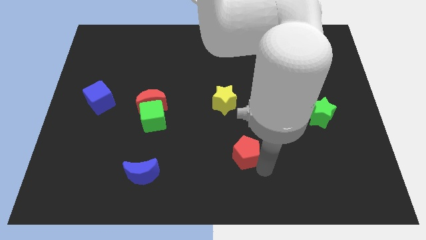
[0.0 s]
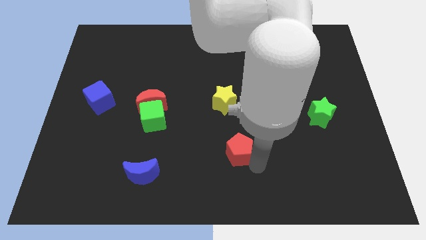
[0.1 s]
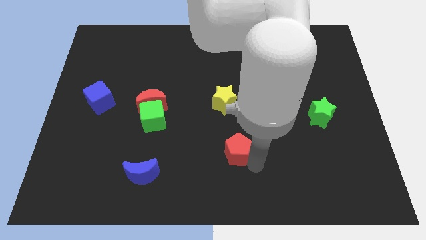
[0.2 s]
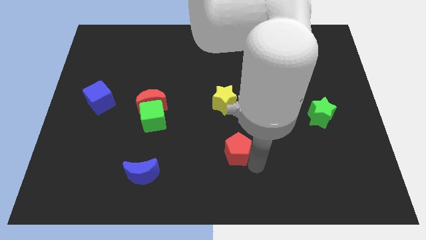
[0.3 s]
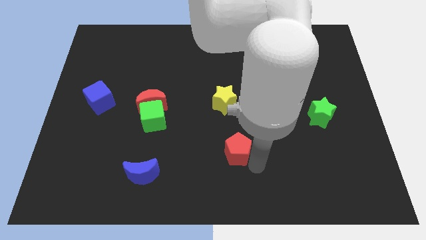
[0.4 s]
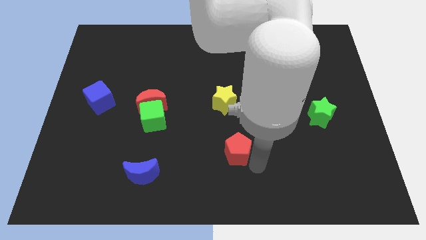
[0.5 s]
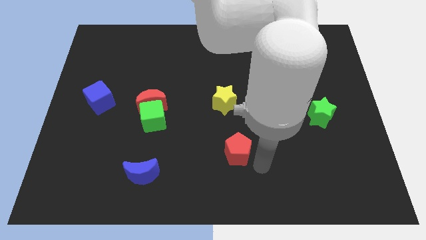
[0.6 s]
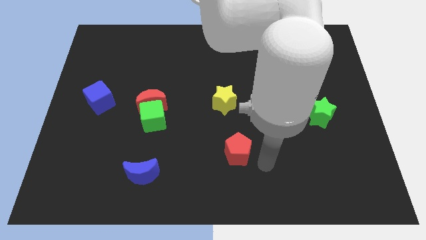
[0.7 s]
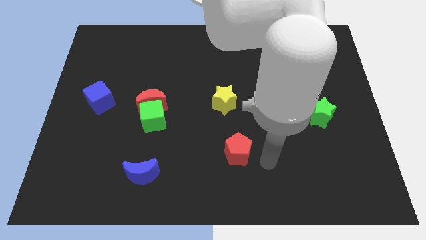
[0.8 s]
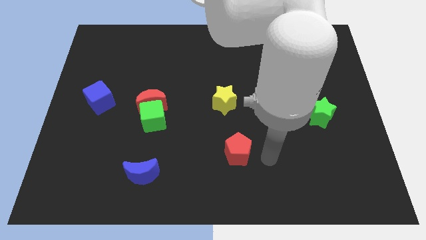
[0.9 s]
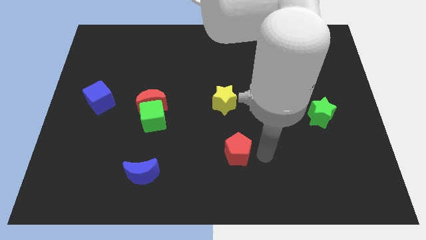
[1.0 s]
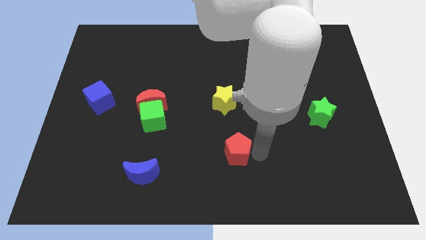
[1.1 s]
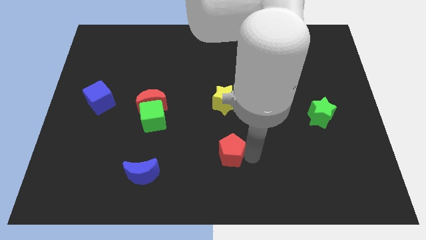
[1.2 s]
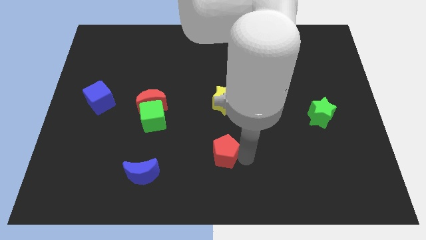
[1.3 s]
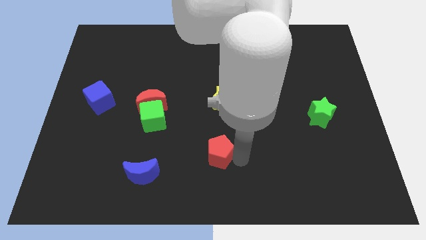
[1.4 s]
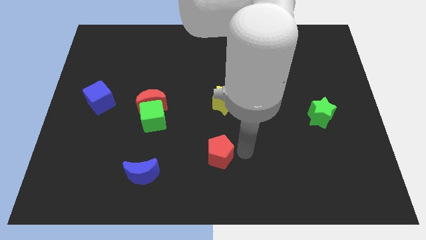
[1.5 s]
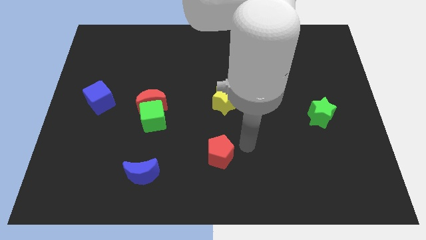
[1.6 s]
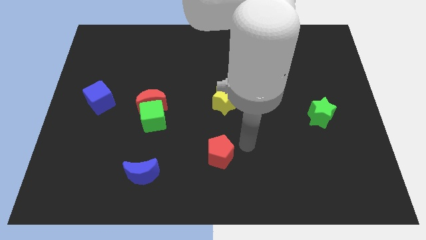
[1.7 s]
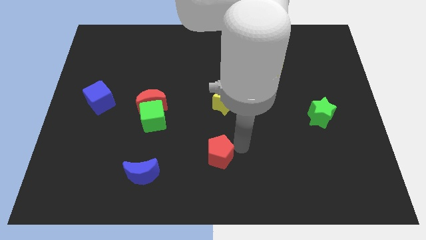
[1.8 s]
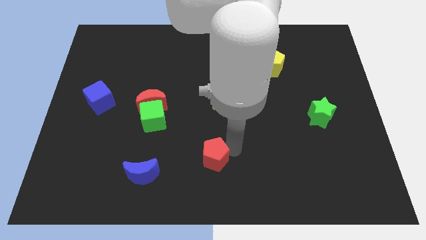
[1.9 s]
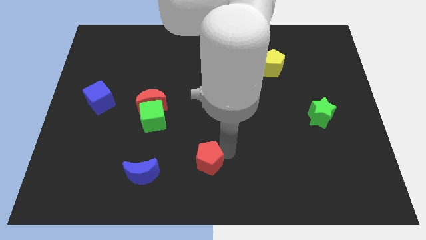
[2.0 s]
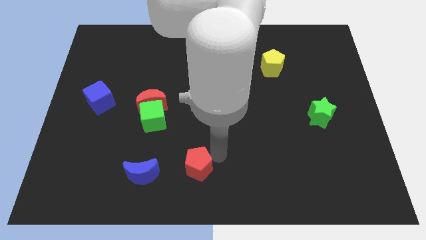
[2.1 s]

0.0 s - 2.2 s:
place the red pentagon diagonally to the yellow star

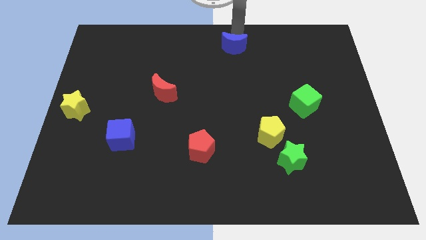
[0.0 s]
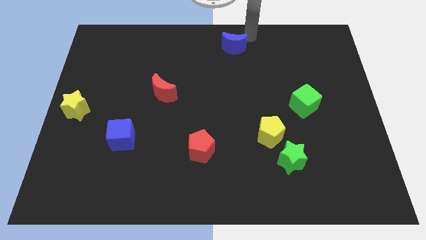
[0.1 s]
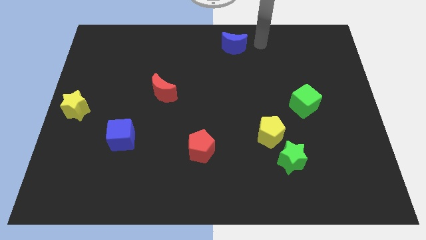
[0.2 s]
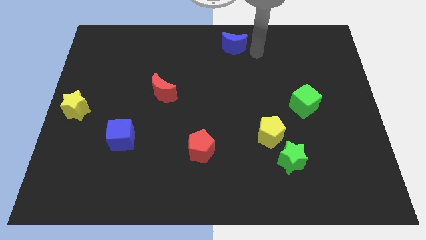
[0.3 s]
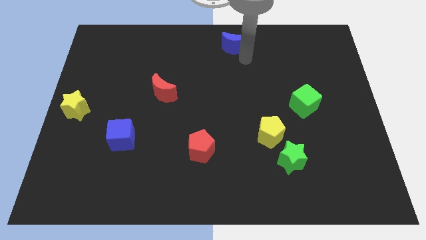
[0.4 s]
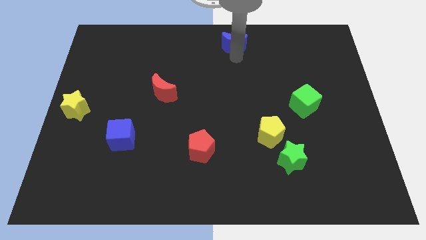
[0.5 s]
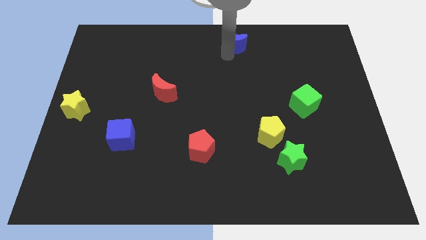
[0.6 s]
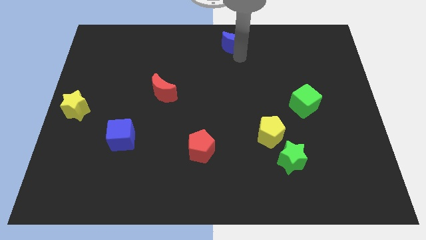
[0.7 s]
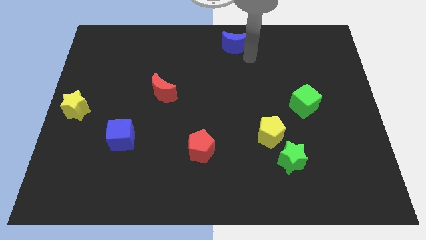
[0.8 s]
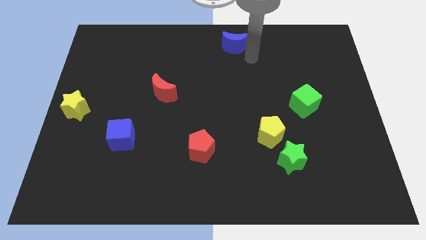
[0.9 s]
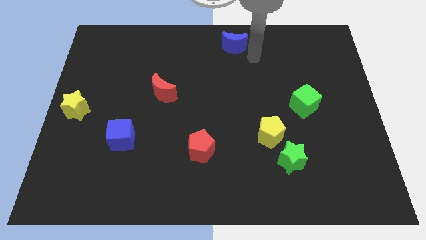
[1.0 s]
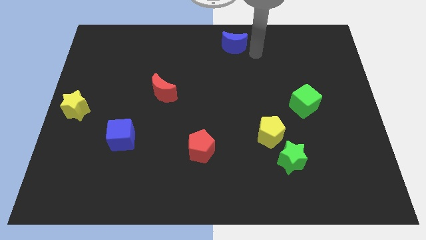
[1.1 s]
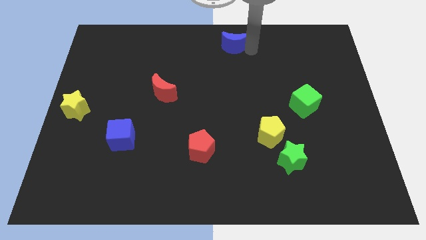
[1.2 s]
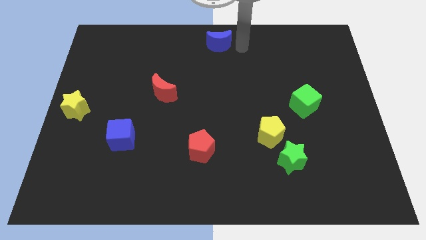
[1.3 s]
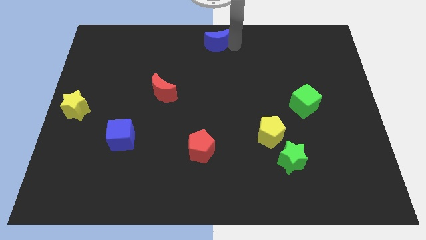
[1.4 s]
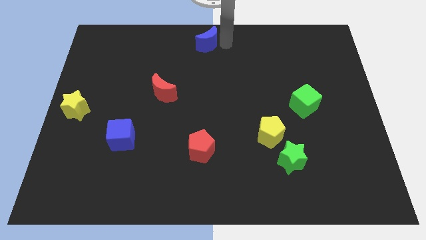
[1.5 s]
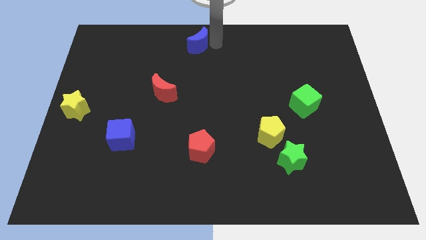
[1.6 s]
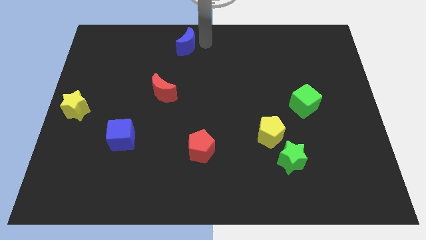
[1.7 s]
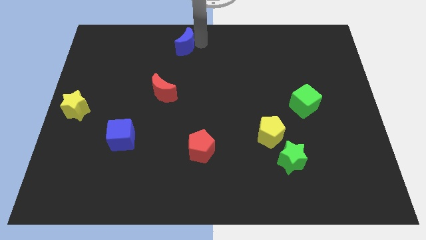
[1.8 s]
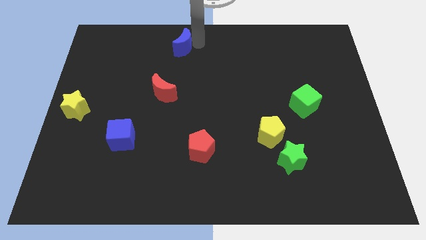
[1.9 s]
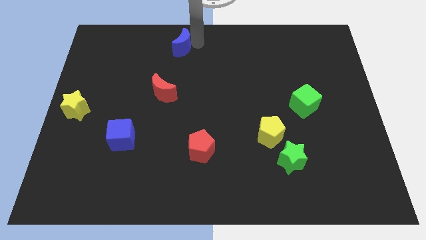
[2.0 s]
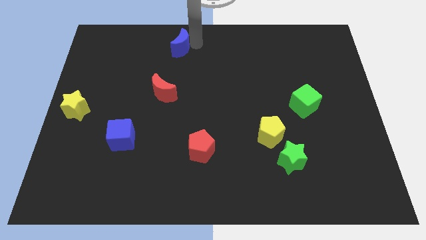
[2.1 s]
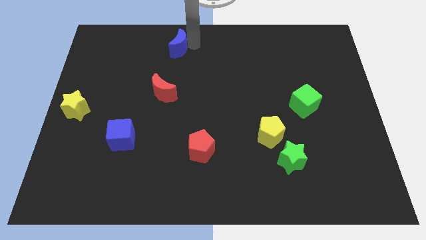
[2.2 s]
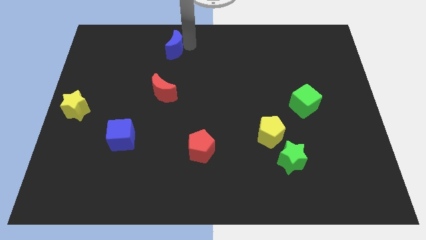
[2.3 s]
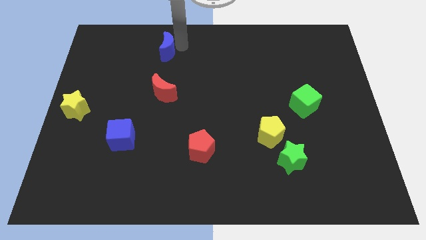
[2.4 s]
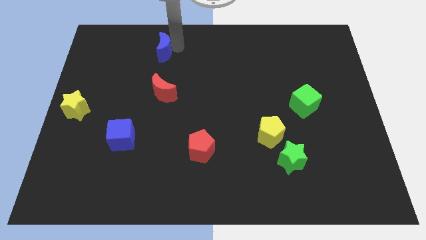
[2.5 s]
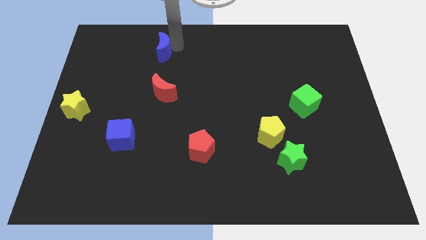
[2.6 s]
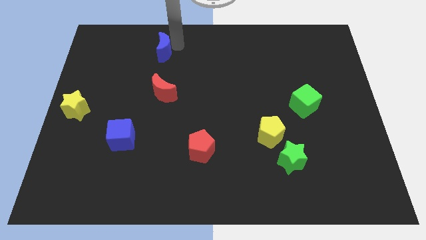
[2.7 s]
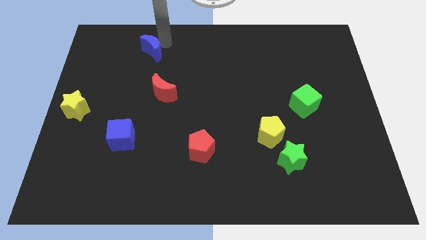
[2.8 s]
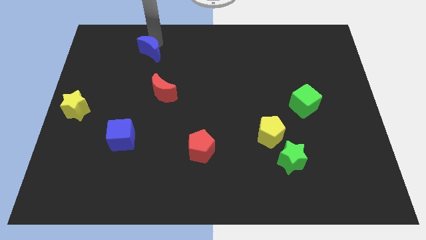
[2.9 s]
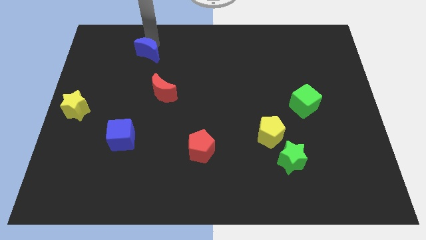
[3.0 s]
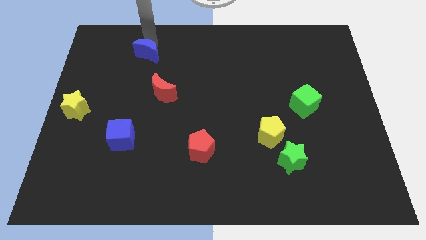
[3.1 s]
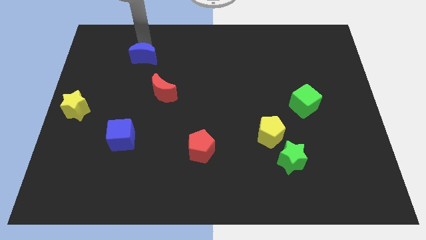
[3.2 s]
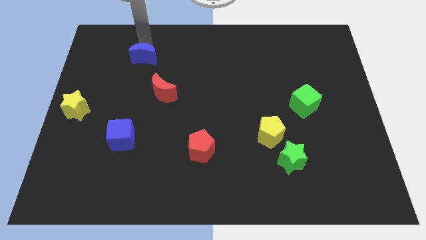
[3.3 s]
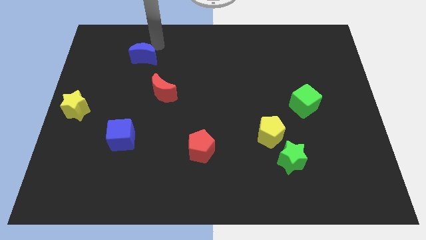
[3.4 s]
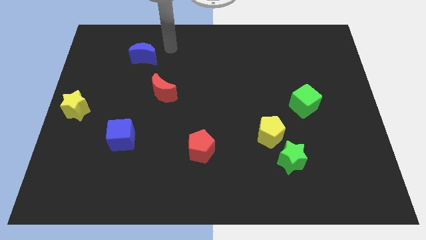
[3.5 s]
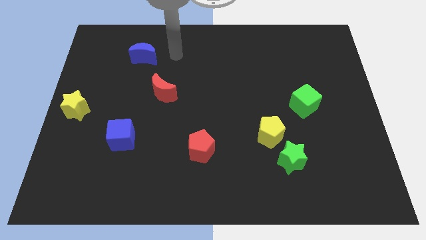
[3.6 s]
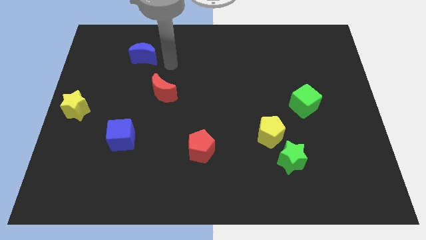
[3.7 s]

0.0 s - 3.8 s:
move the blue moon to the left

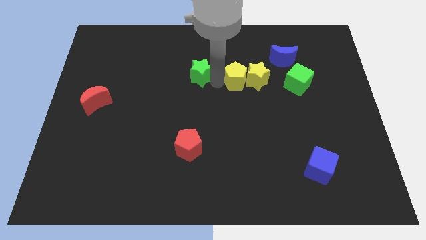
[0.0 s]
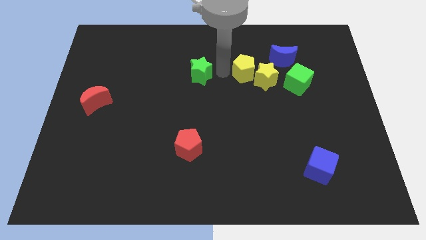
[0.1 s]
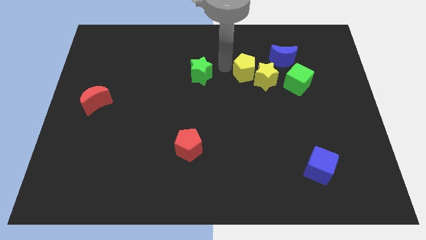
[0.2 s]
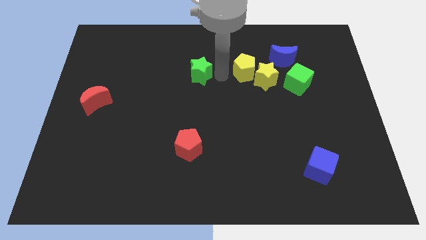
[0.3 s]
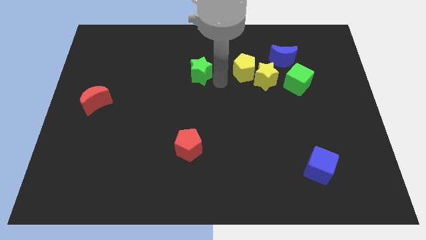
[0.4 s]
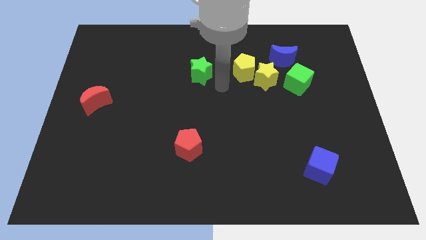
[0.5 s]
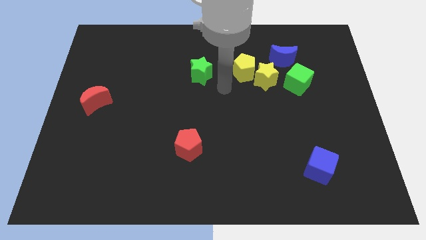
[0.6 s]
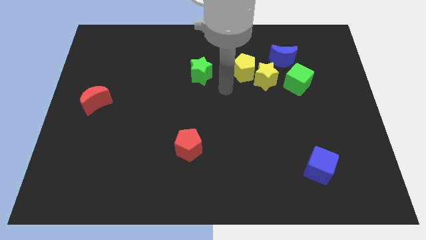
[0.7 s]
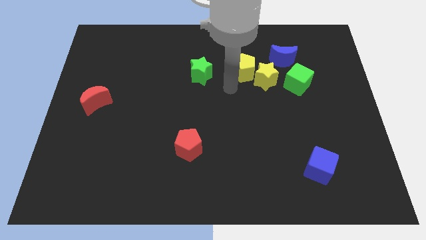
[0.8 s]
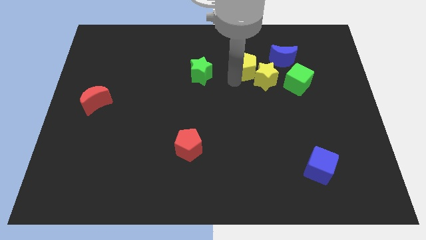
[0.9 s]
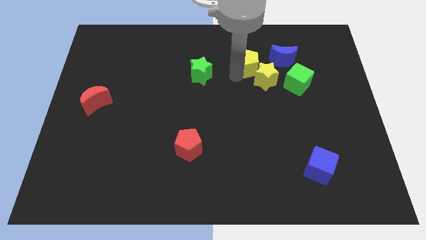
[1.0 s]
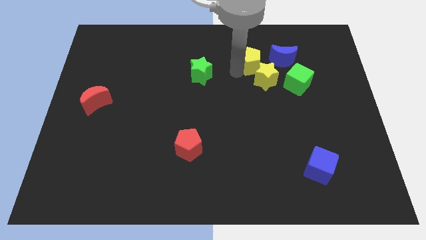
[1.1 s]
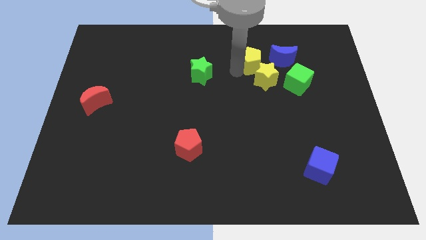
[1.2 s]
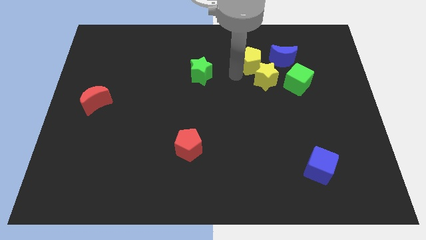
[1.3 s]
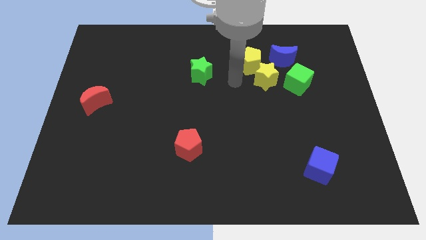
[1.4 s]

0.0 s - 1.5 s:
separate yellow block from green star

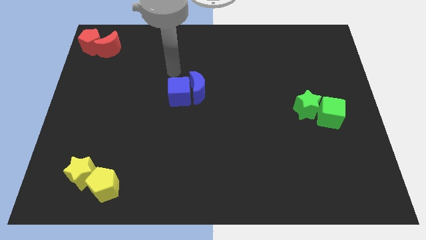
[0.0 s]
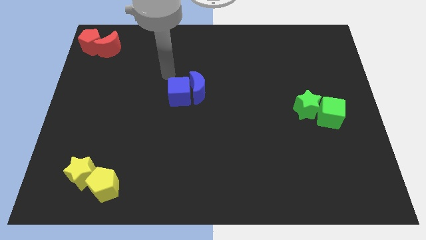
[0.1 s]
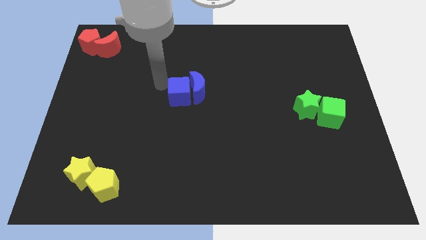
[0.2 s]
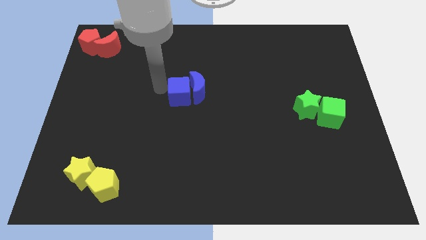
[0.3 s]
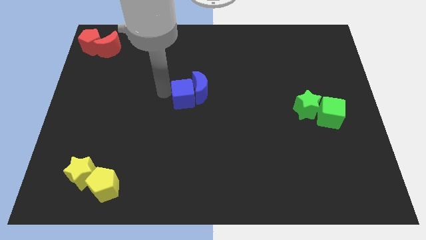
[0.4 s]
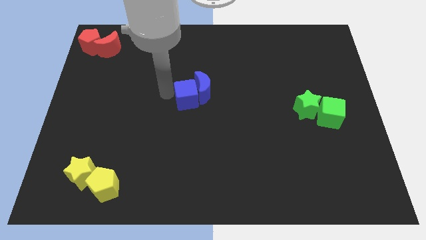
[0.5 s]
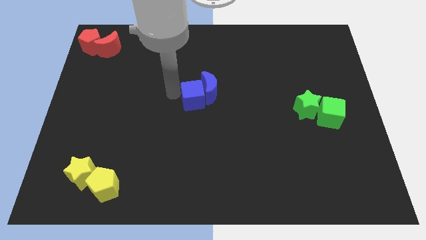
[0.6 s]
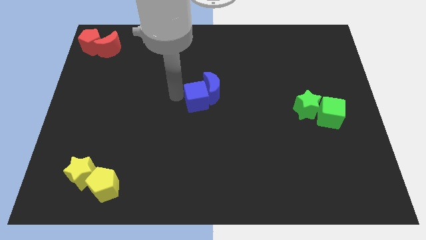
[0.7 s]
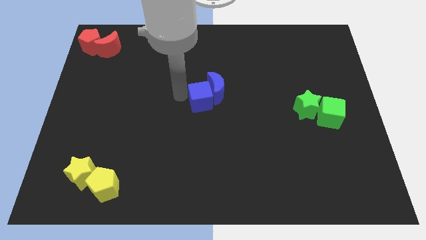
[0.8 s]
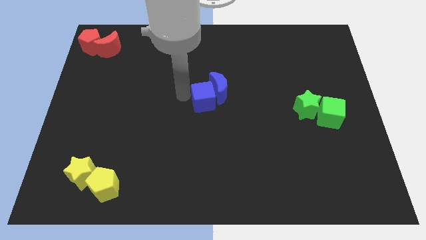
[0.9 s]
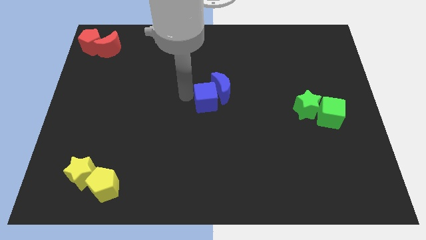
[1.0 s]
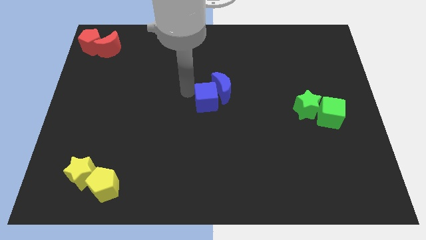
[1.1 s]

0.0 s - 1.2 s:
push the blue cube along the blue crescent to the center of the board

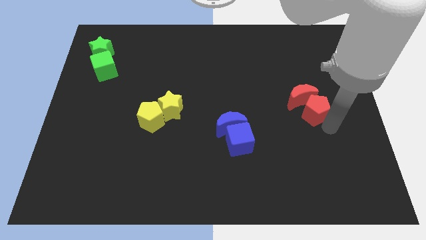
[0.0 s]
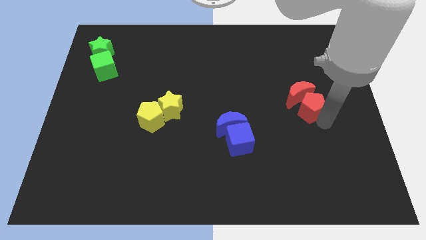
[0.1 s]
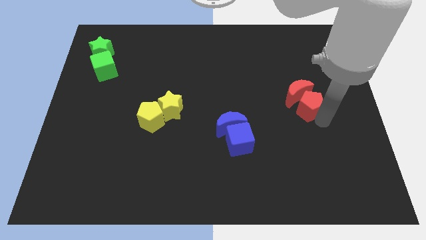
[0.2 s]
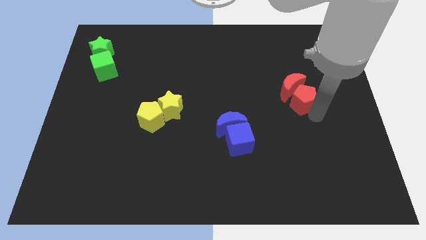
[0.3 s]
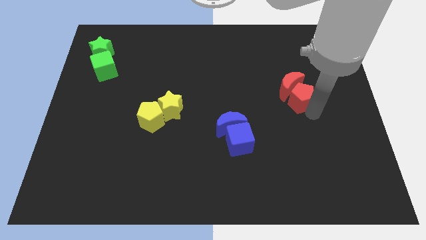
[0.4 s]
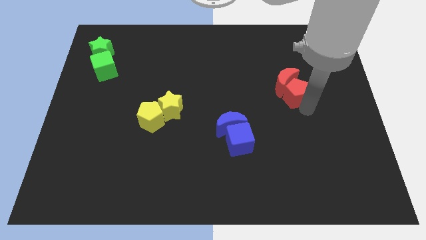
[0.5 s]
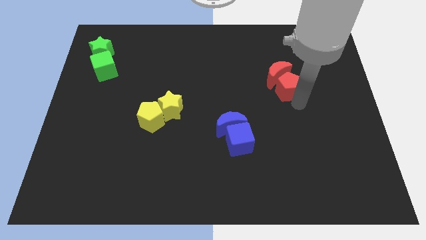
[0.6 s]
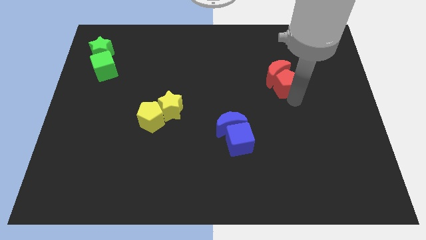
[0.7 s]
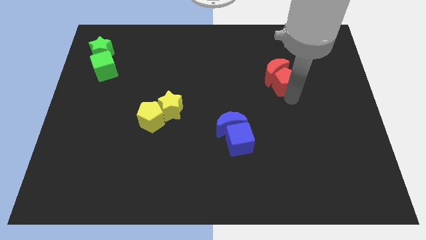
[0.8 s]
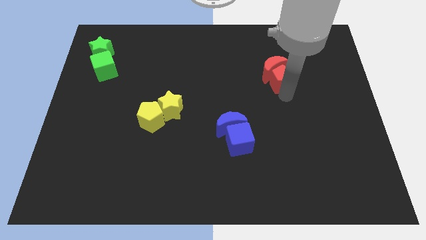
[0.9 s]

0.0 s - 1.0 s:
move the red blocks towards the top side of the board
